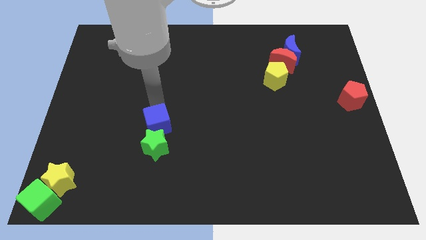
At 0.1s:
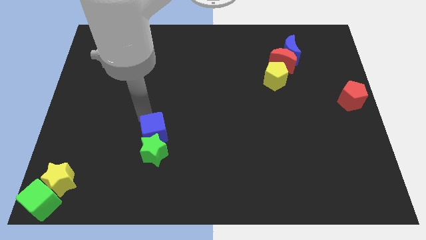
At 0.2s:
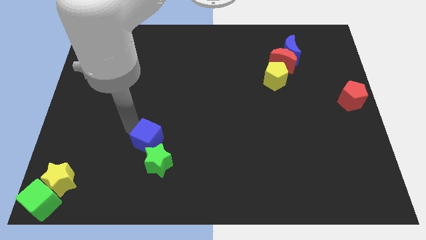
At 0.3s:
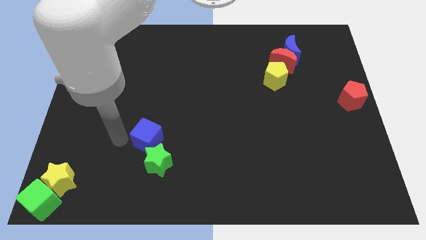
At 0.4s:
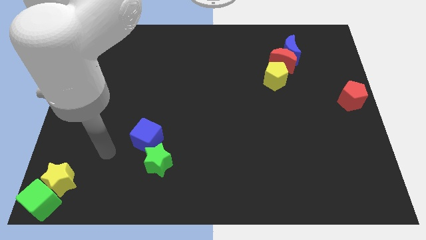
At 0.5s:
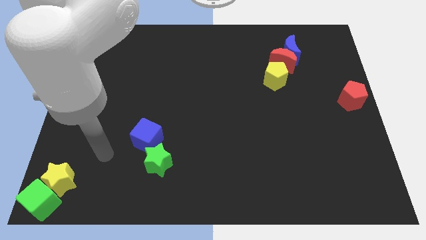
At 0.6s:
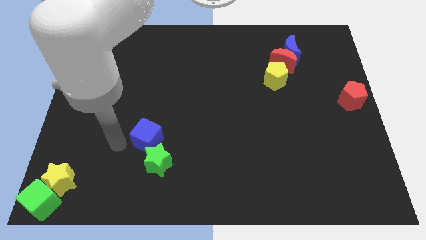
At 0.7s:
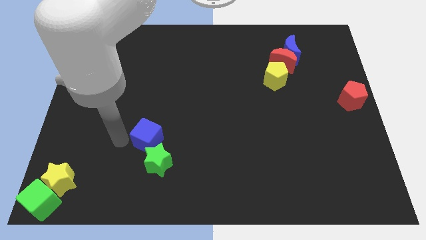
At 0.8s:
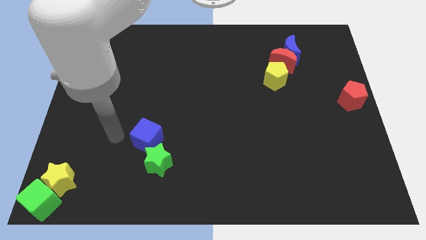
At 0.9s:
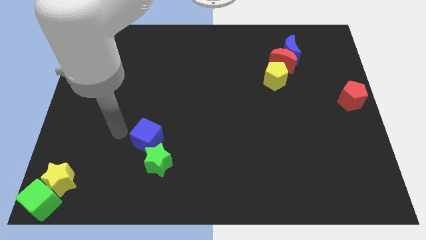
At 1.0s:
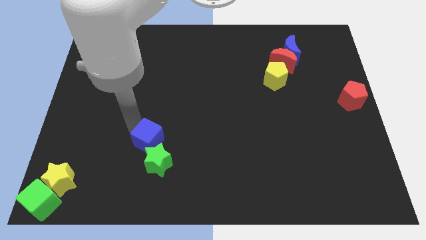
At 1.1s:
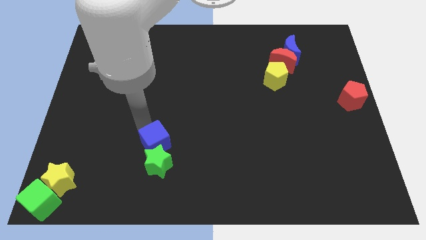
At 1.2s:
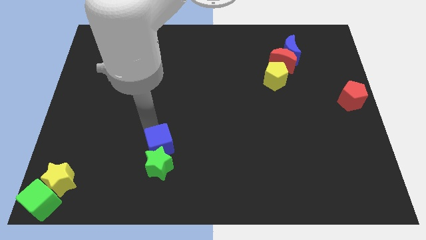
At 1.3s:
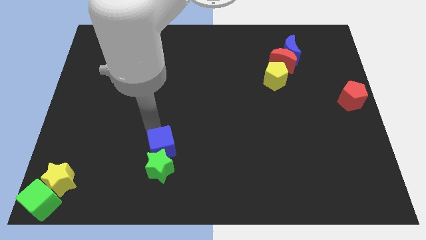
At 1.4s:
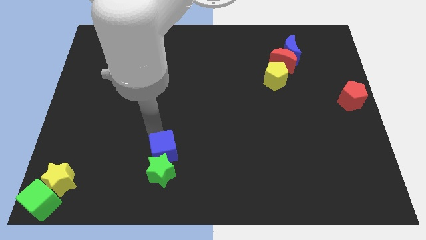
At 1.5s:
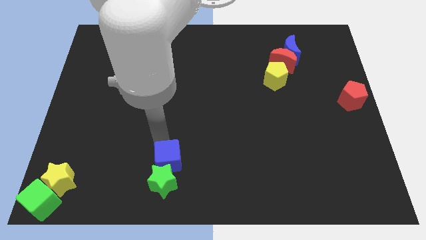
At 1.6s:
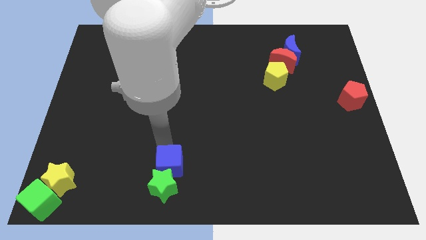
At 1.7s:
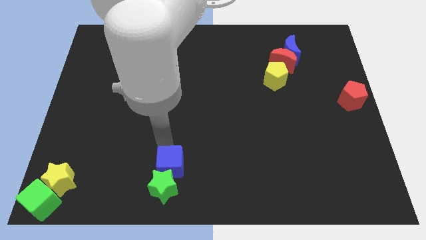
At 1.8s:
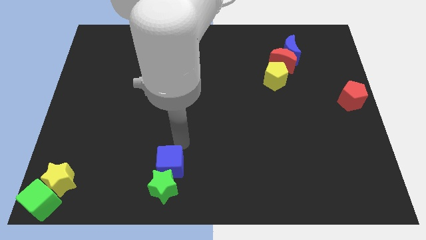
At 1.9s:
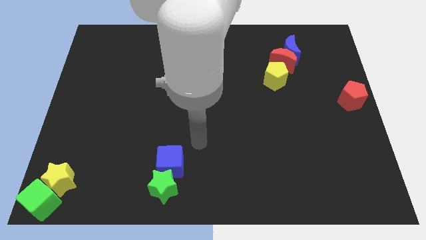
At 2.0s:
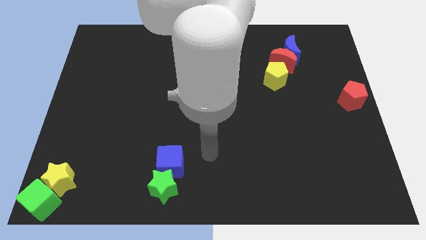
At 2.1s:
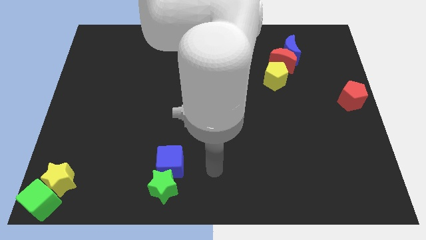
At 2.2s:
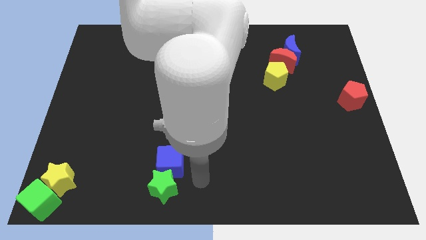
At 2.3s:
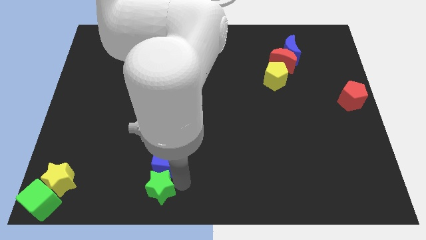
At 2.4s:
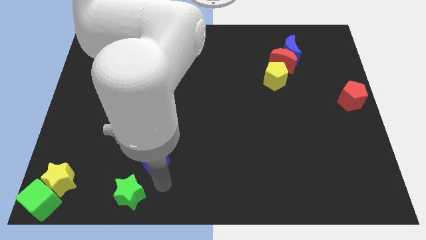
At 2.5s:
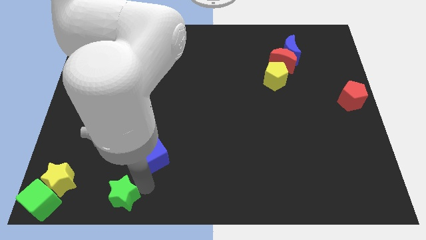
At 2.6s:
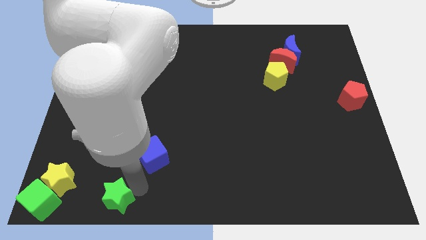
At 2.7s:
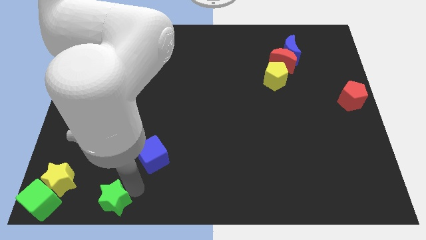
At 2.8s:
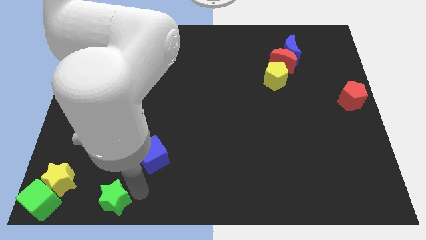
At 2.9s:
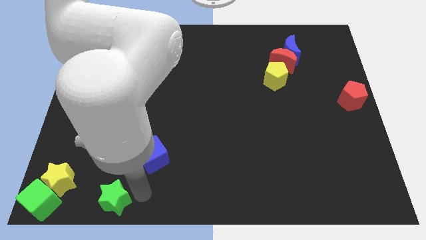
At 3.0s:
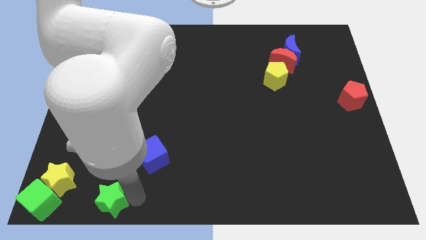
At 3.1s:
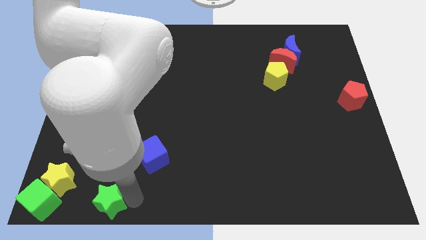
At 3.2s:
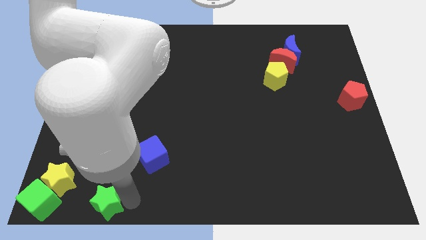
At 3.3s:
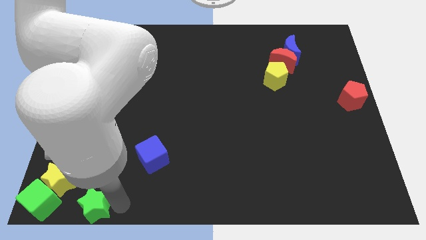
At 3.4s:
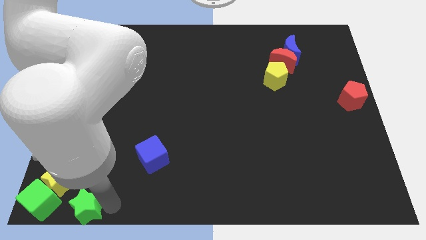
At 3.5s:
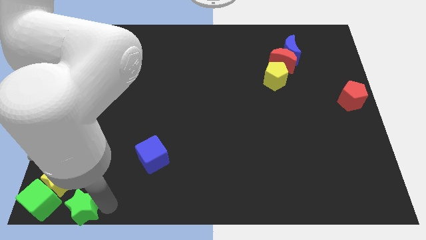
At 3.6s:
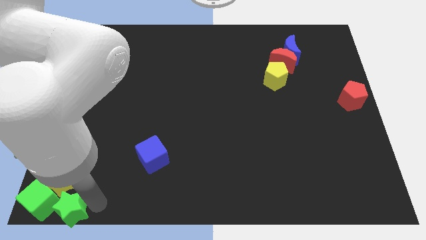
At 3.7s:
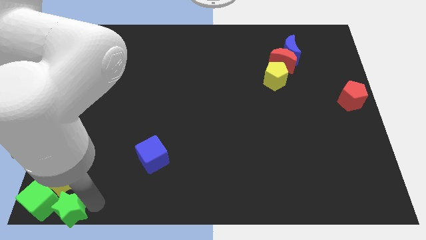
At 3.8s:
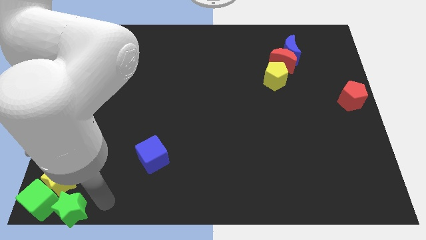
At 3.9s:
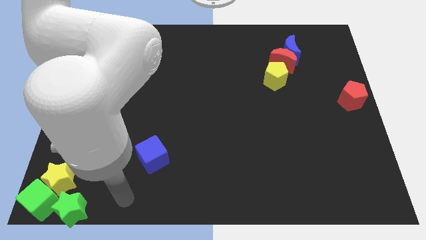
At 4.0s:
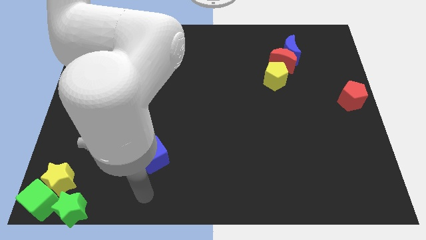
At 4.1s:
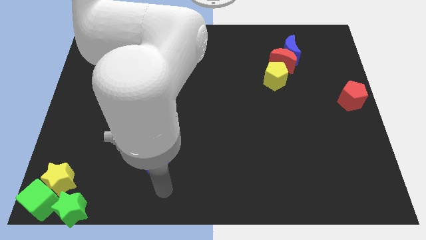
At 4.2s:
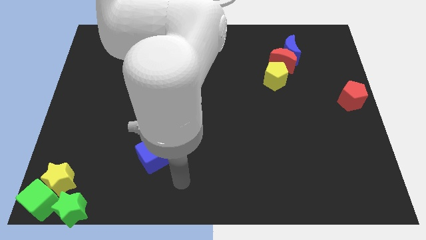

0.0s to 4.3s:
place the green star to the right of the green cube

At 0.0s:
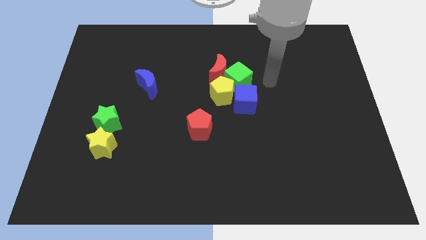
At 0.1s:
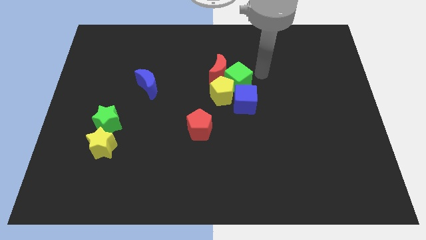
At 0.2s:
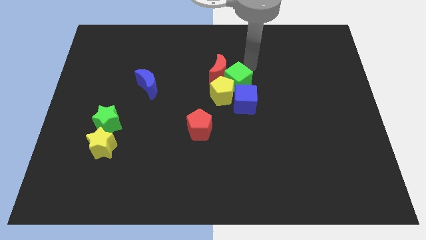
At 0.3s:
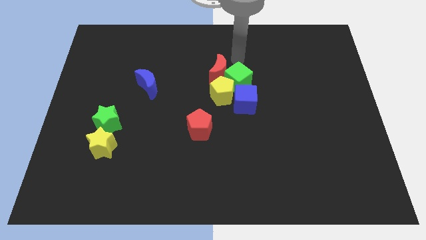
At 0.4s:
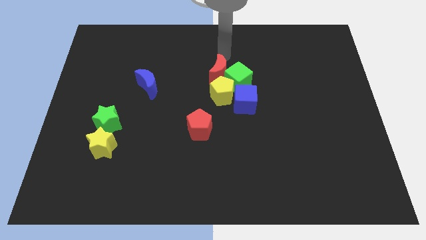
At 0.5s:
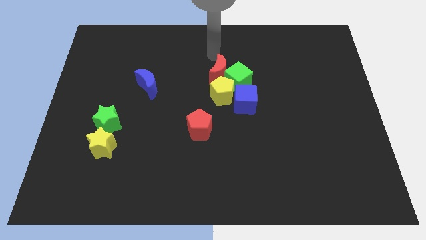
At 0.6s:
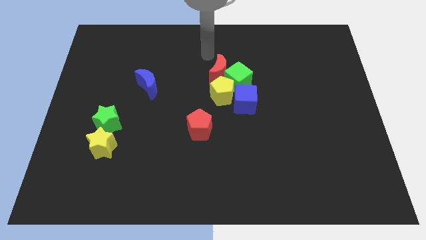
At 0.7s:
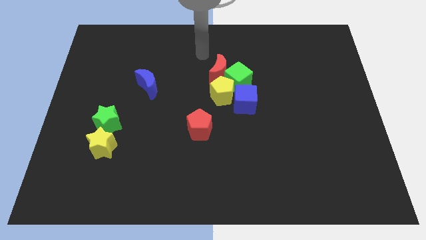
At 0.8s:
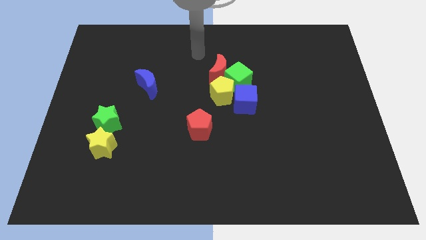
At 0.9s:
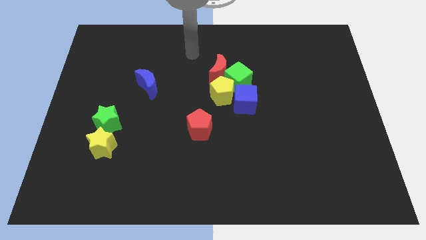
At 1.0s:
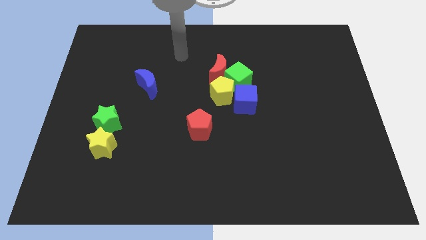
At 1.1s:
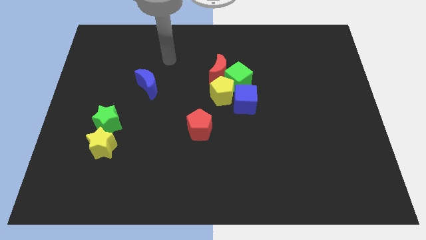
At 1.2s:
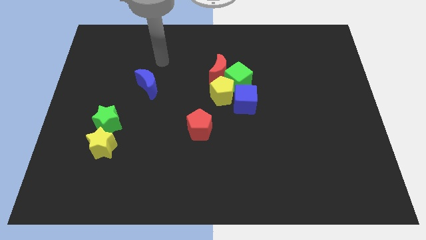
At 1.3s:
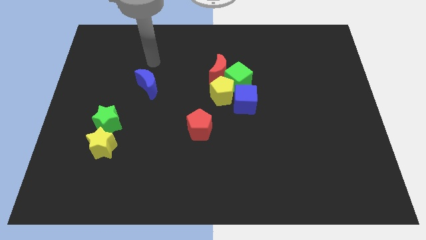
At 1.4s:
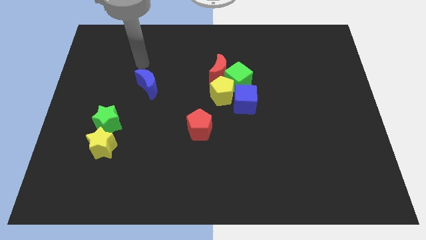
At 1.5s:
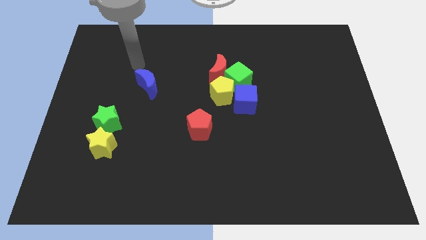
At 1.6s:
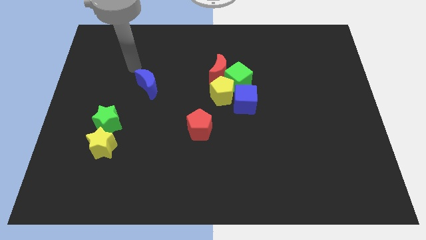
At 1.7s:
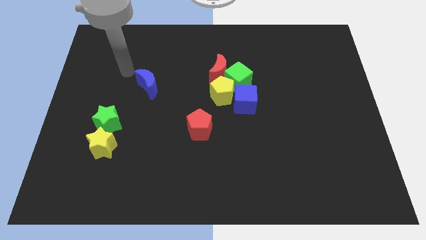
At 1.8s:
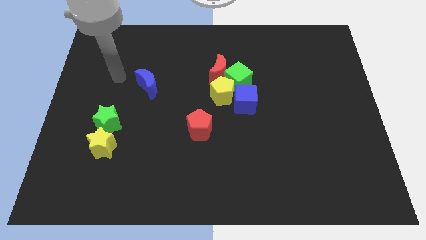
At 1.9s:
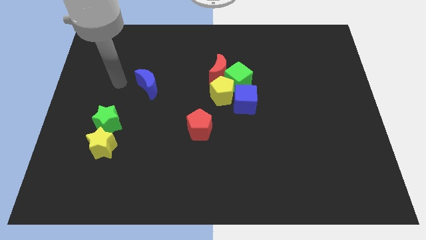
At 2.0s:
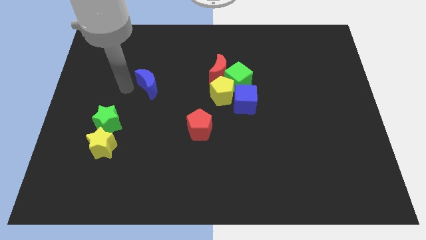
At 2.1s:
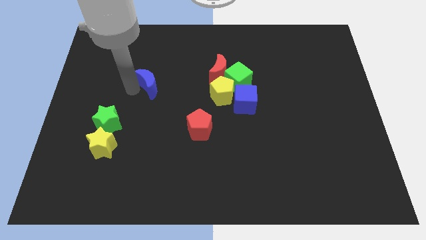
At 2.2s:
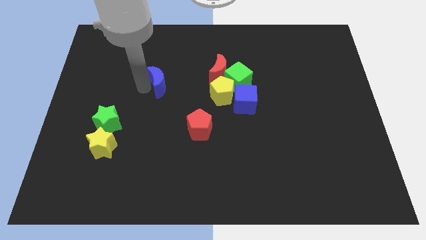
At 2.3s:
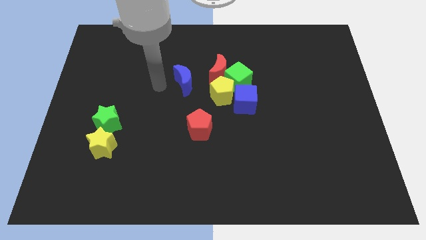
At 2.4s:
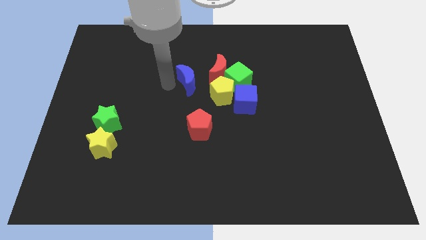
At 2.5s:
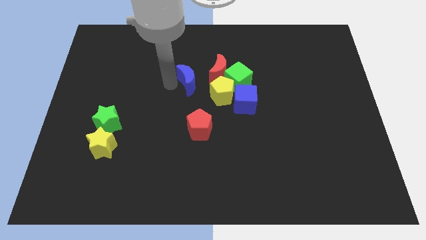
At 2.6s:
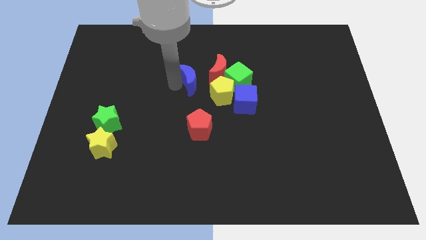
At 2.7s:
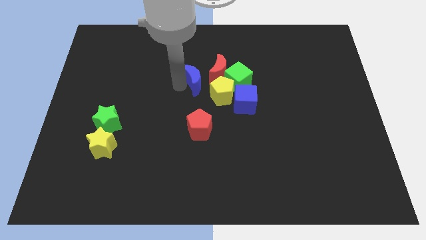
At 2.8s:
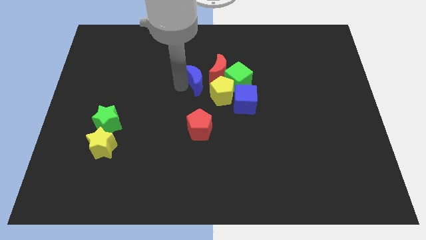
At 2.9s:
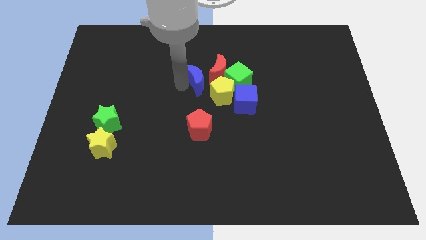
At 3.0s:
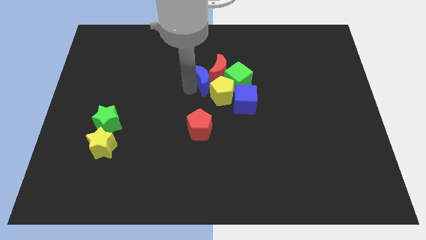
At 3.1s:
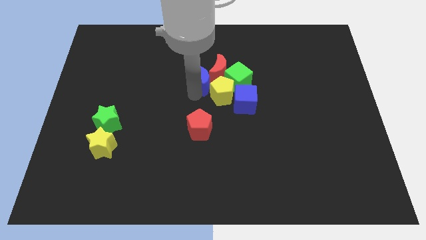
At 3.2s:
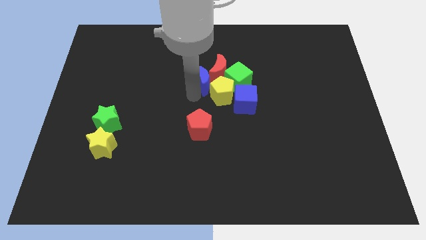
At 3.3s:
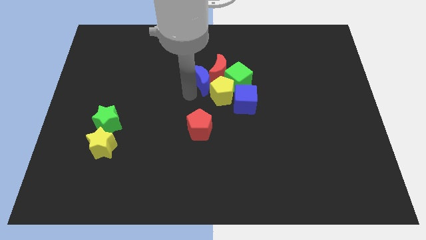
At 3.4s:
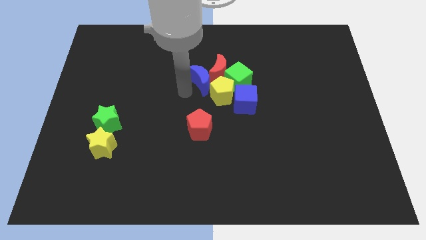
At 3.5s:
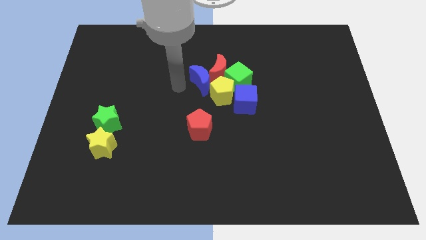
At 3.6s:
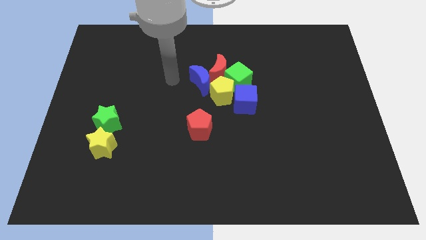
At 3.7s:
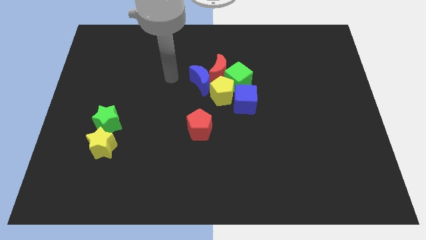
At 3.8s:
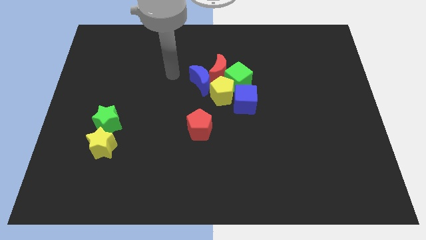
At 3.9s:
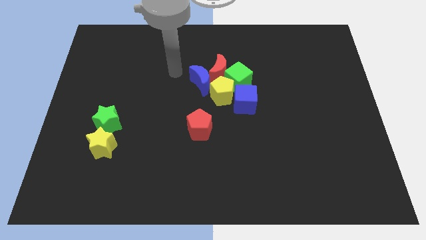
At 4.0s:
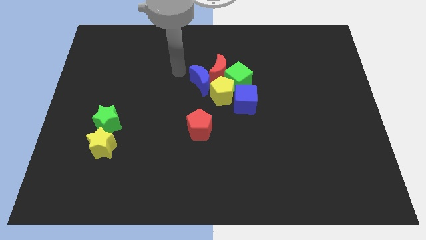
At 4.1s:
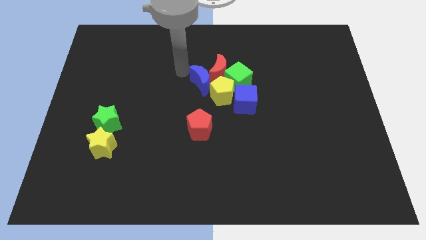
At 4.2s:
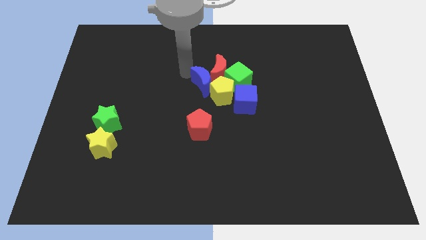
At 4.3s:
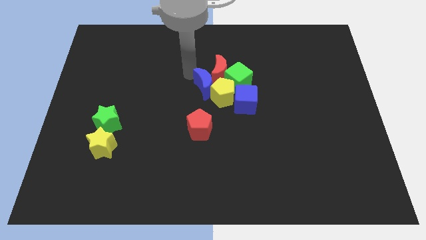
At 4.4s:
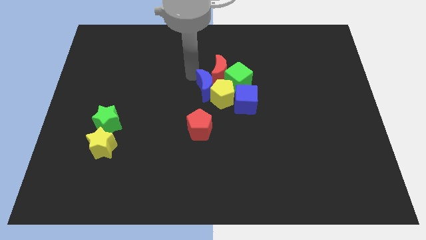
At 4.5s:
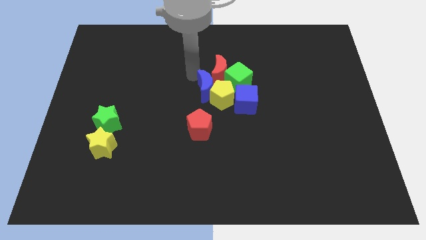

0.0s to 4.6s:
make the blue crescent to touch the left side of the yellow pentagon

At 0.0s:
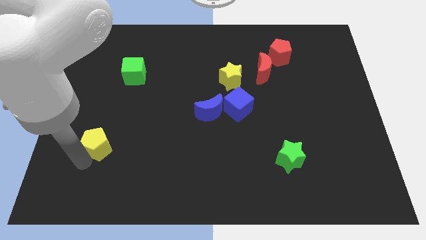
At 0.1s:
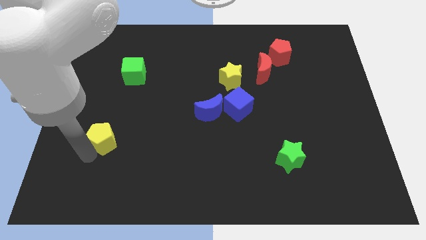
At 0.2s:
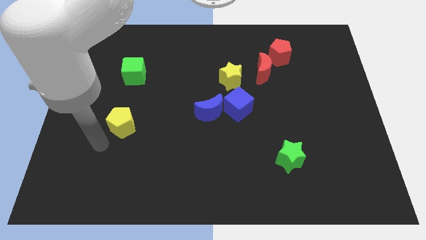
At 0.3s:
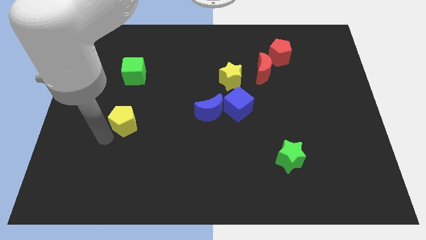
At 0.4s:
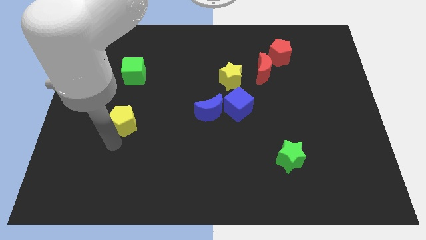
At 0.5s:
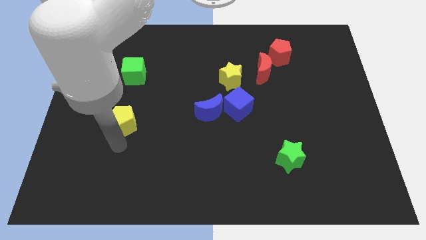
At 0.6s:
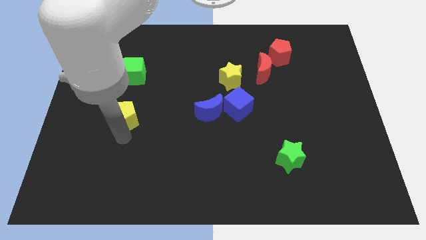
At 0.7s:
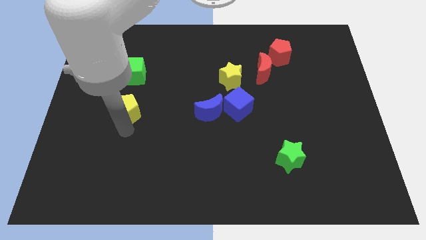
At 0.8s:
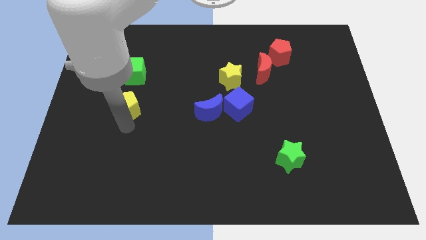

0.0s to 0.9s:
place the yellow pentagon below the green cube
